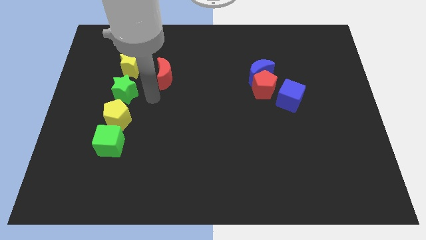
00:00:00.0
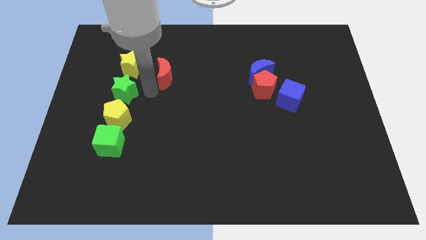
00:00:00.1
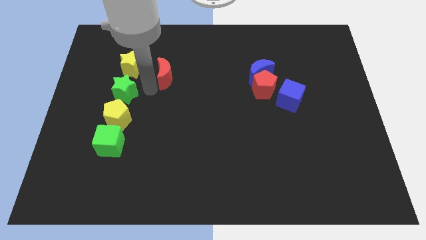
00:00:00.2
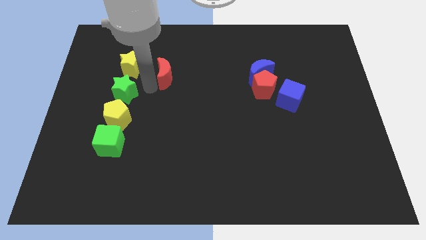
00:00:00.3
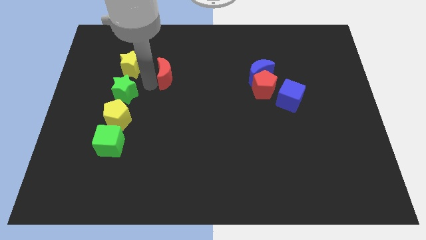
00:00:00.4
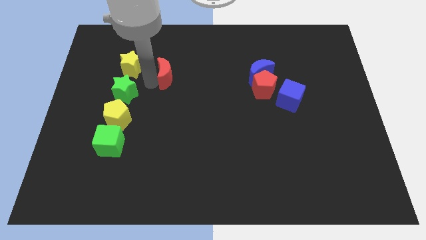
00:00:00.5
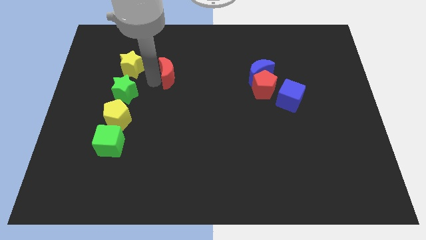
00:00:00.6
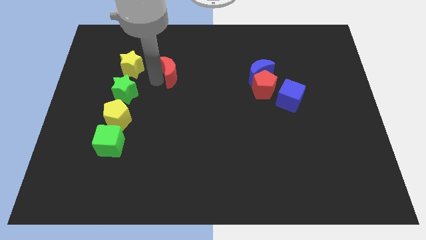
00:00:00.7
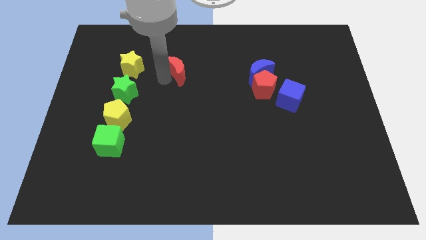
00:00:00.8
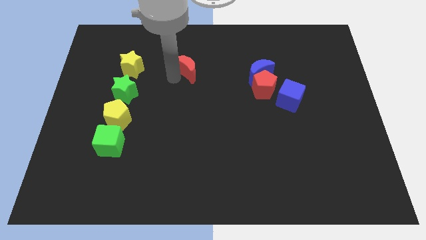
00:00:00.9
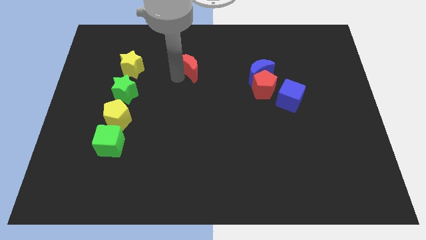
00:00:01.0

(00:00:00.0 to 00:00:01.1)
separate the red crescent from the group of blocks

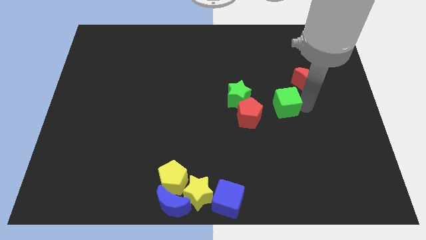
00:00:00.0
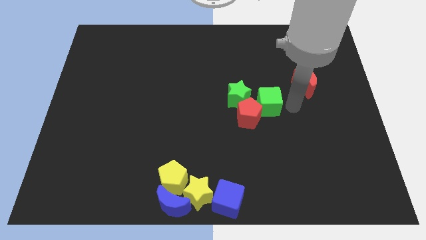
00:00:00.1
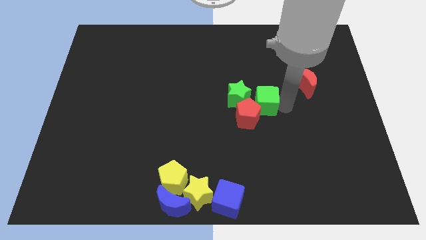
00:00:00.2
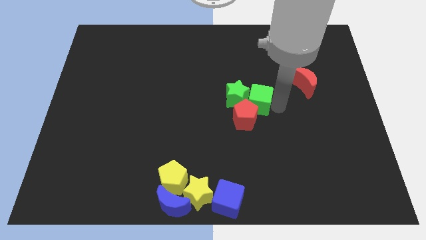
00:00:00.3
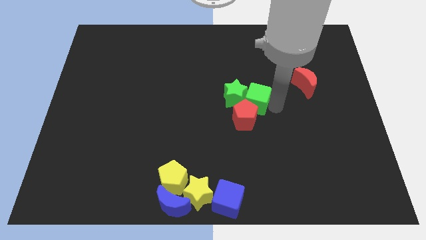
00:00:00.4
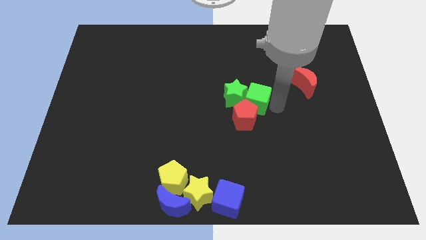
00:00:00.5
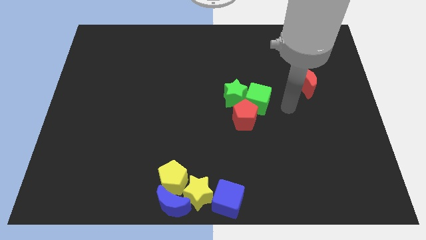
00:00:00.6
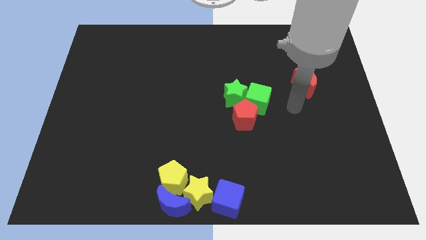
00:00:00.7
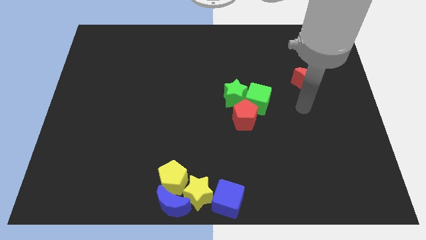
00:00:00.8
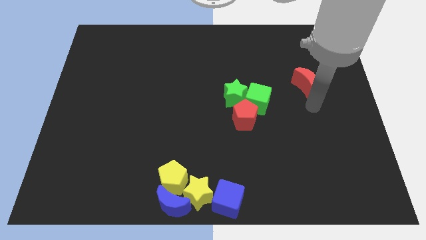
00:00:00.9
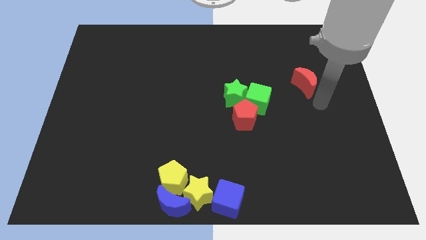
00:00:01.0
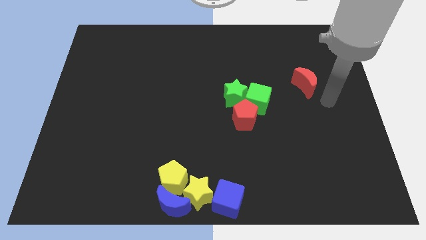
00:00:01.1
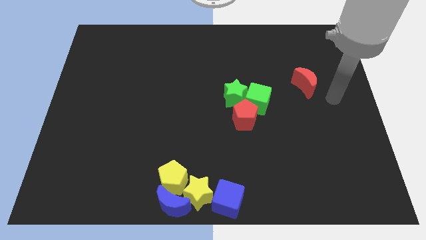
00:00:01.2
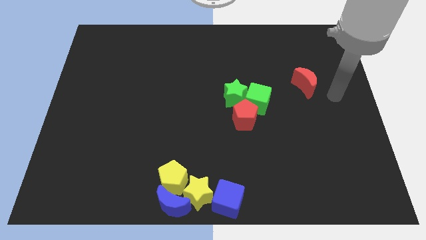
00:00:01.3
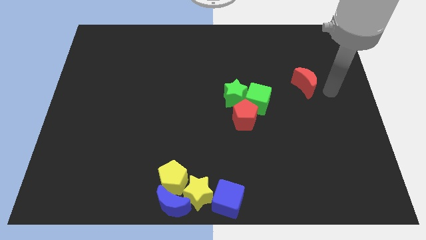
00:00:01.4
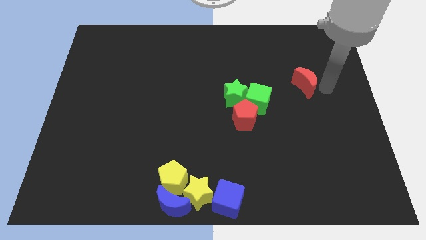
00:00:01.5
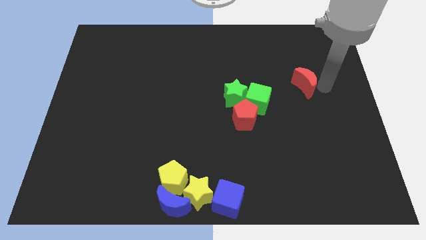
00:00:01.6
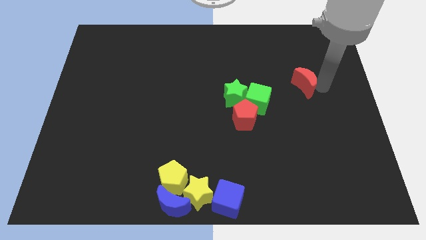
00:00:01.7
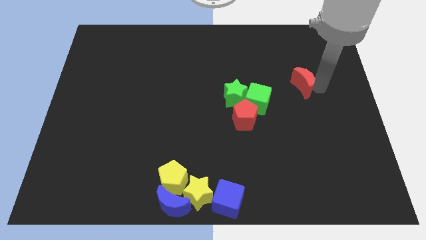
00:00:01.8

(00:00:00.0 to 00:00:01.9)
push the green cube right to the green star

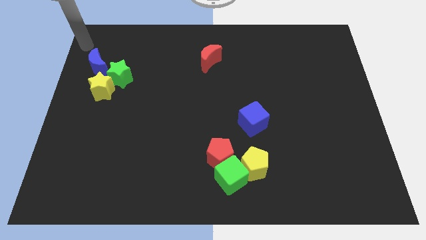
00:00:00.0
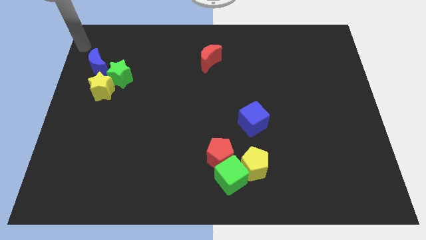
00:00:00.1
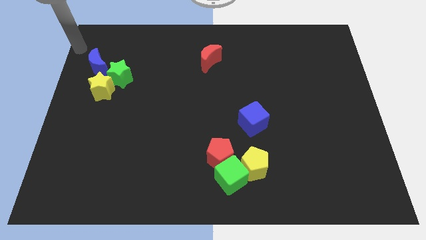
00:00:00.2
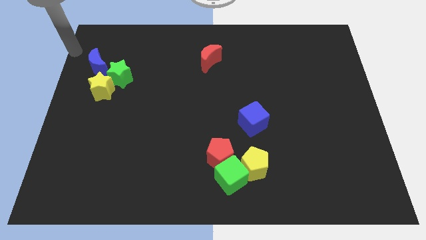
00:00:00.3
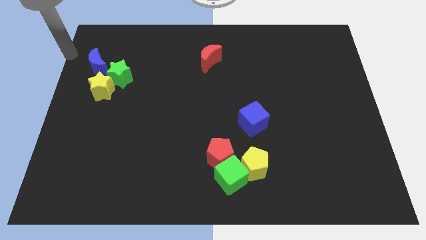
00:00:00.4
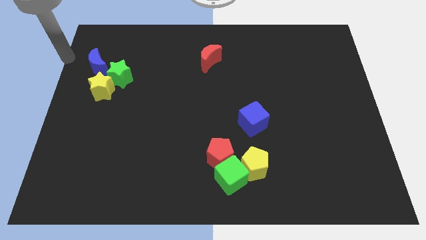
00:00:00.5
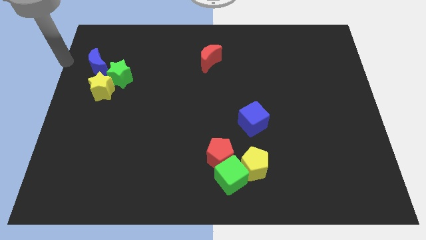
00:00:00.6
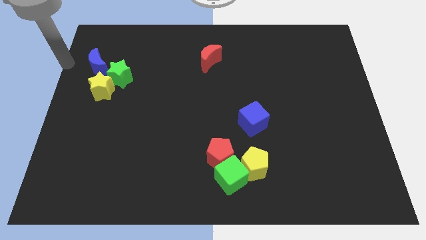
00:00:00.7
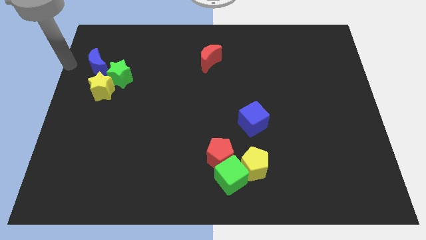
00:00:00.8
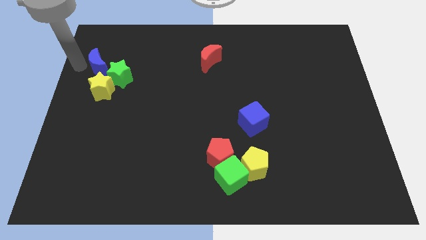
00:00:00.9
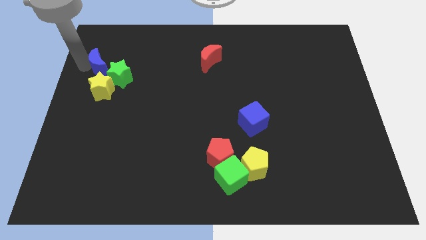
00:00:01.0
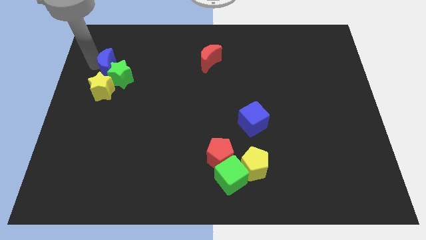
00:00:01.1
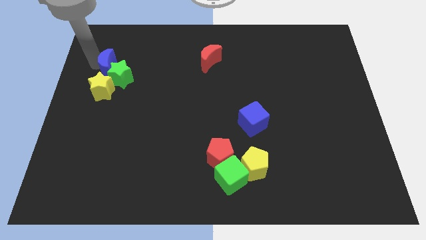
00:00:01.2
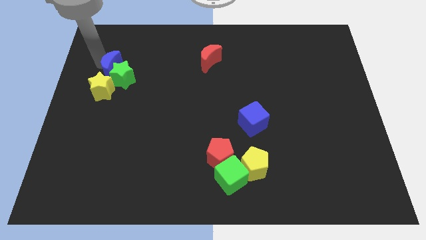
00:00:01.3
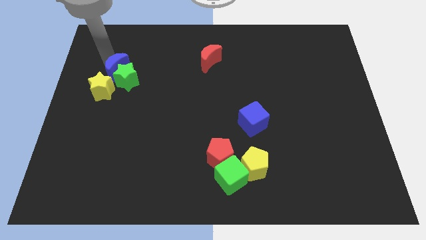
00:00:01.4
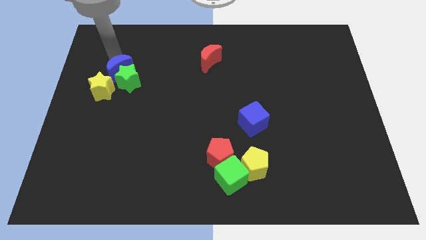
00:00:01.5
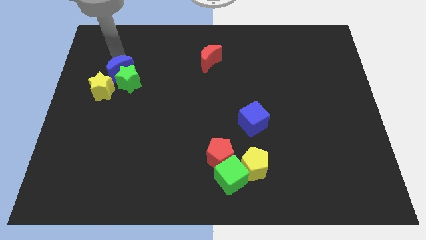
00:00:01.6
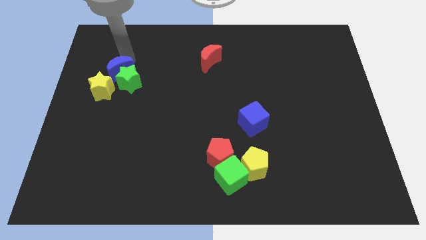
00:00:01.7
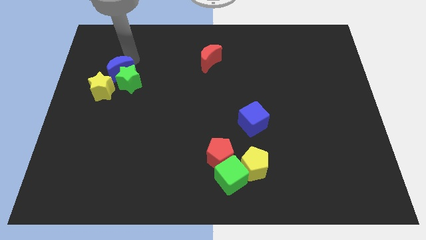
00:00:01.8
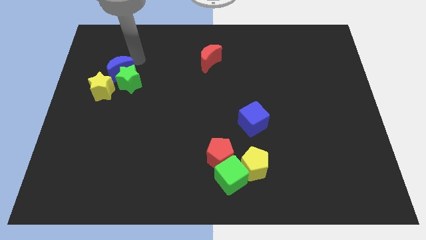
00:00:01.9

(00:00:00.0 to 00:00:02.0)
push the blue crescent into the green star

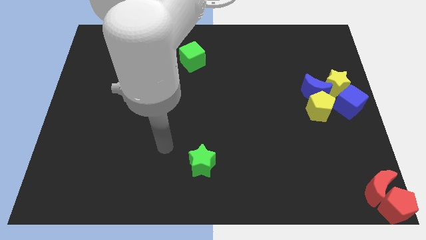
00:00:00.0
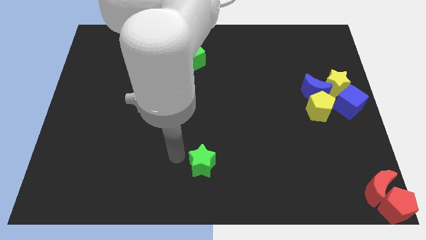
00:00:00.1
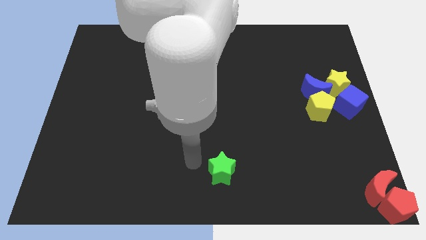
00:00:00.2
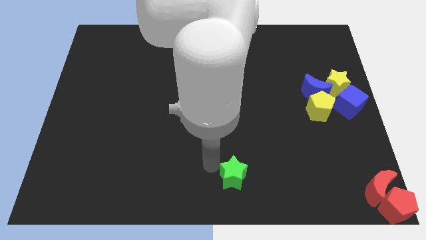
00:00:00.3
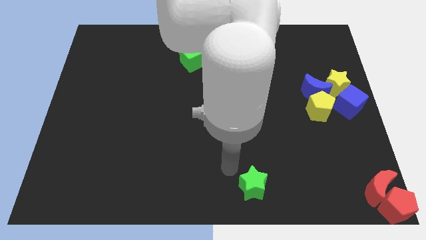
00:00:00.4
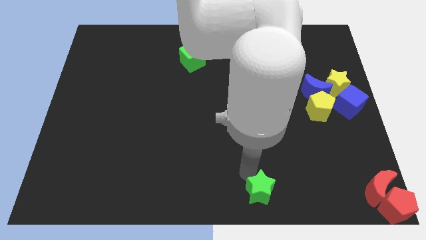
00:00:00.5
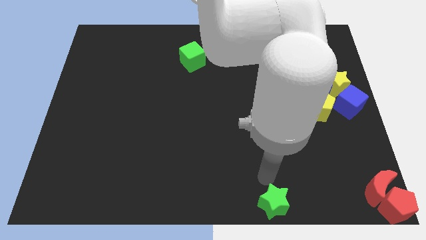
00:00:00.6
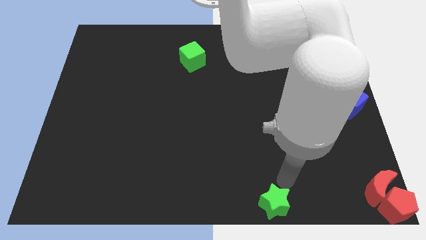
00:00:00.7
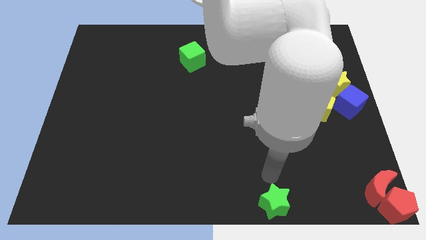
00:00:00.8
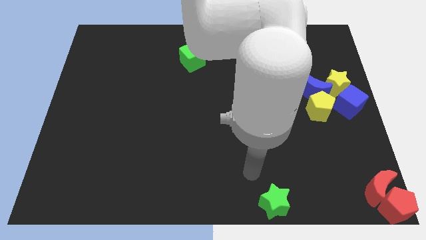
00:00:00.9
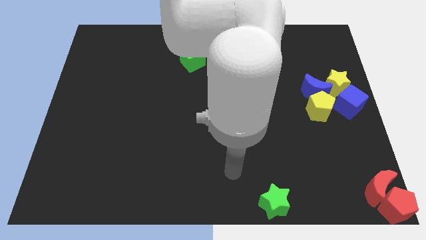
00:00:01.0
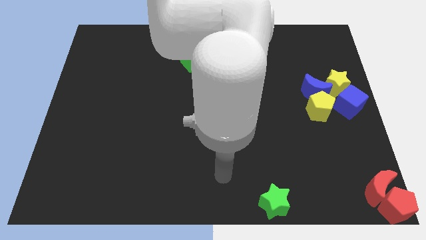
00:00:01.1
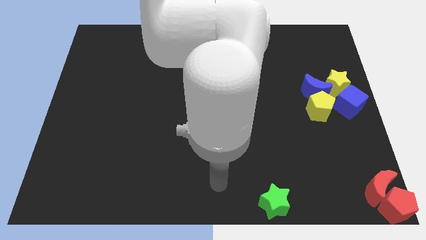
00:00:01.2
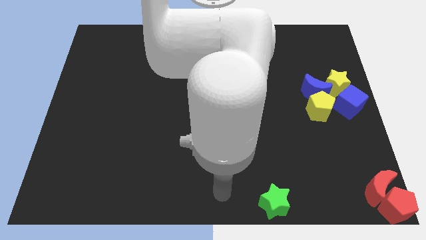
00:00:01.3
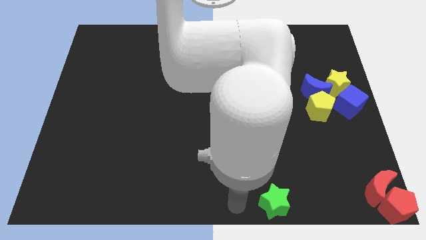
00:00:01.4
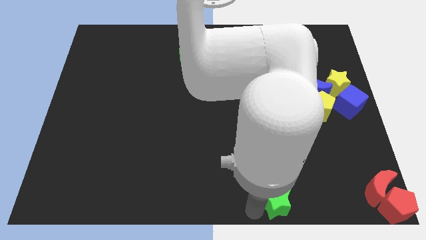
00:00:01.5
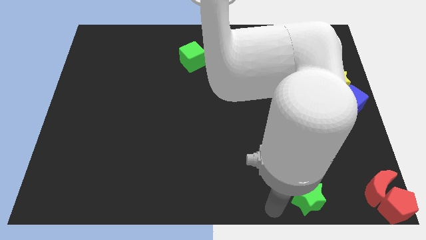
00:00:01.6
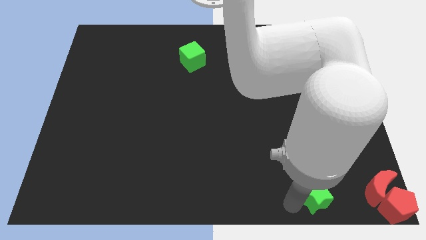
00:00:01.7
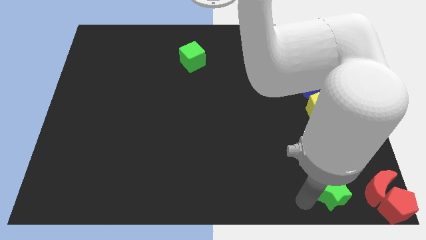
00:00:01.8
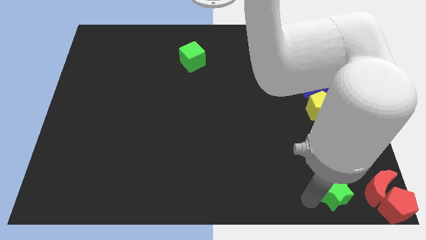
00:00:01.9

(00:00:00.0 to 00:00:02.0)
place a green star on the left side of the red crescent

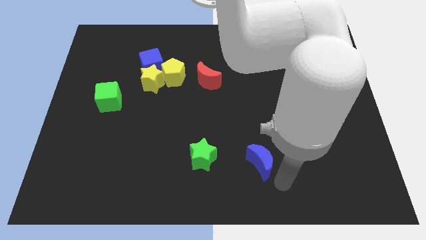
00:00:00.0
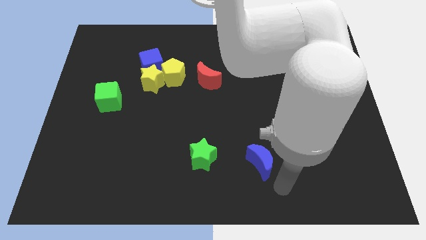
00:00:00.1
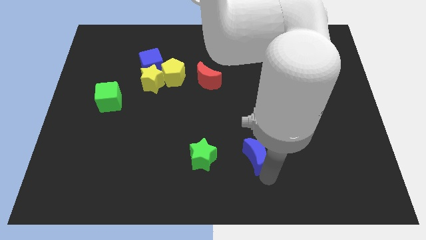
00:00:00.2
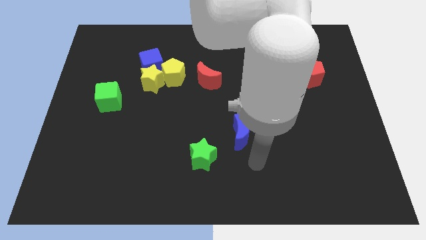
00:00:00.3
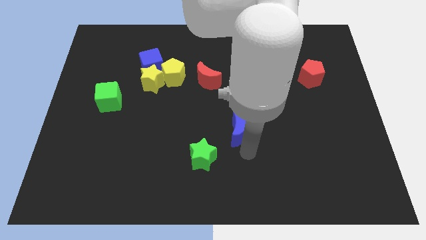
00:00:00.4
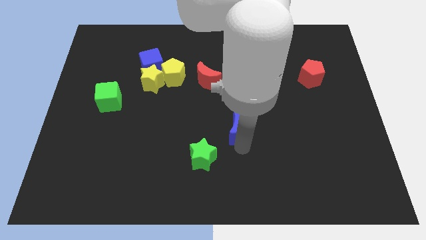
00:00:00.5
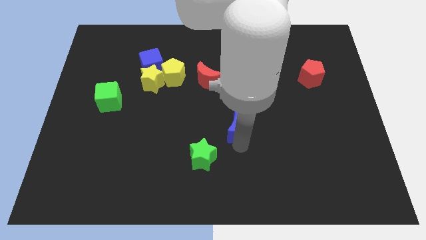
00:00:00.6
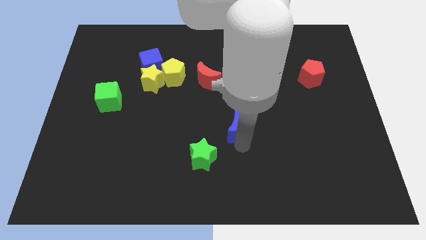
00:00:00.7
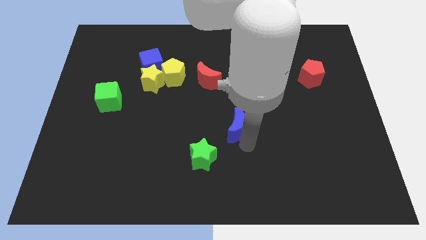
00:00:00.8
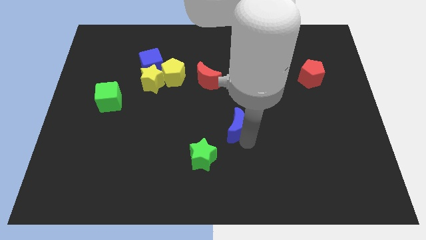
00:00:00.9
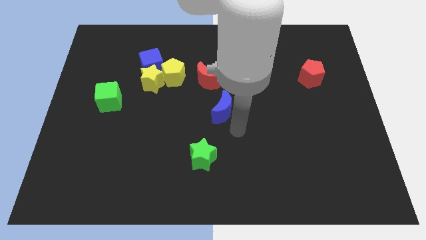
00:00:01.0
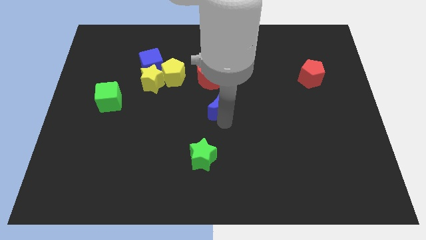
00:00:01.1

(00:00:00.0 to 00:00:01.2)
move the blue crescent to the center of the board

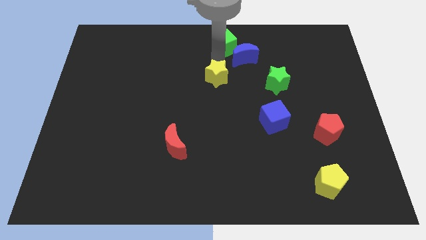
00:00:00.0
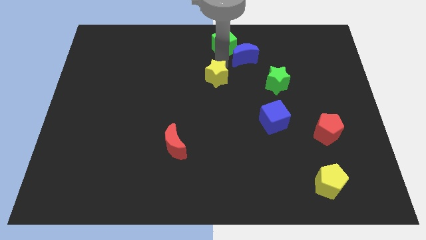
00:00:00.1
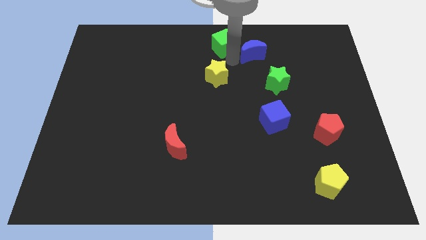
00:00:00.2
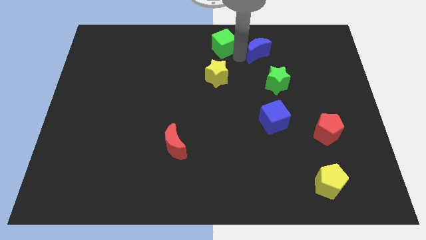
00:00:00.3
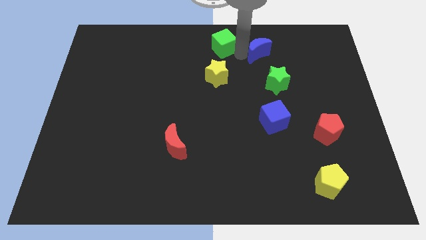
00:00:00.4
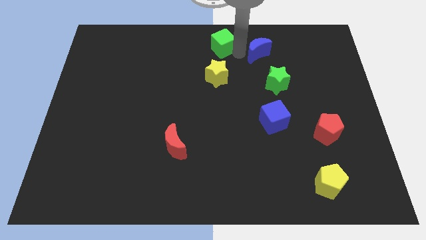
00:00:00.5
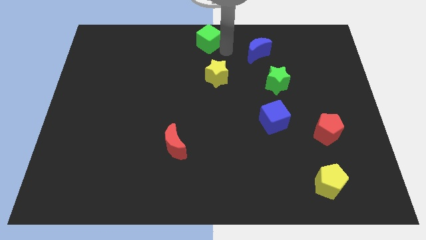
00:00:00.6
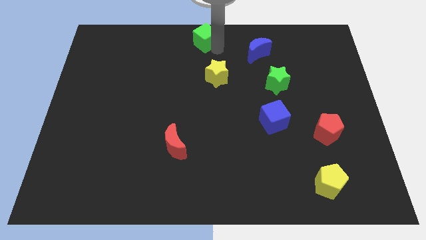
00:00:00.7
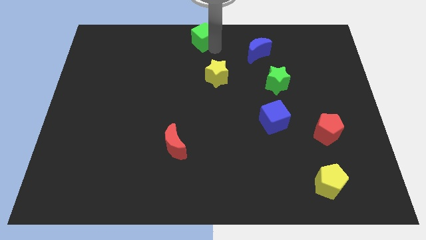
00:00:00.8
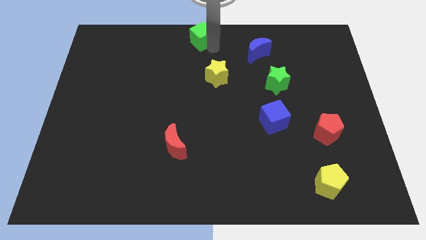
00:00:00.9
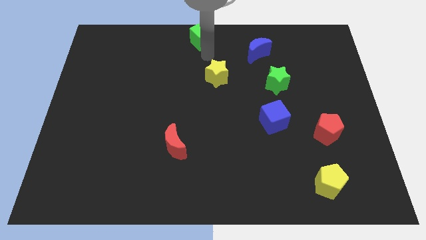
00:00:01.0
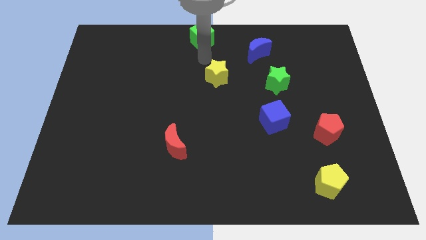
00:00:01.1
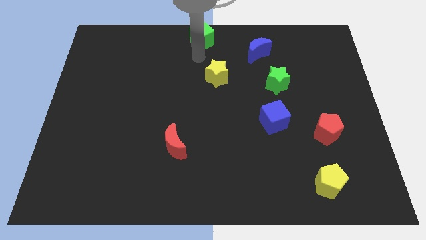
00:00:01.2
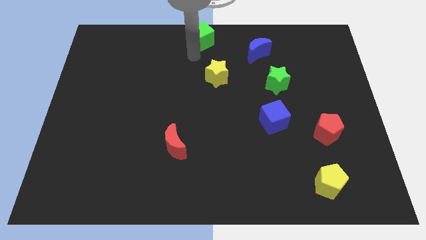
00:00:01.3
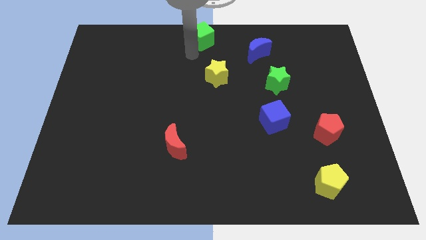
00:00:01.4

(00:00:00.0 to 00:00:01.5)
push the green cube slightly to the left
